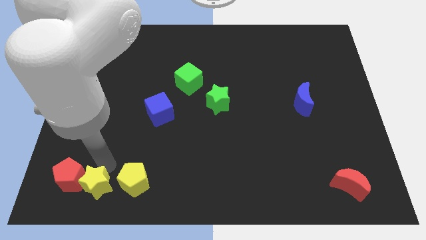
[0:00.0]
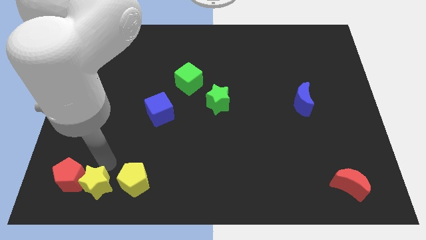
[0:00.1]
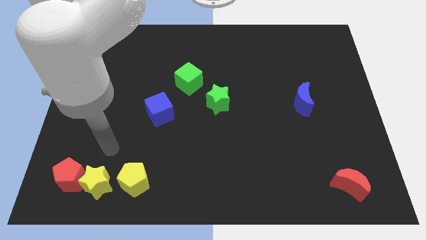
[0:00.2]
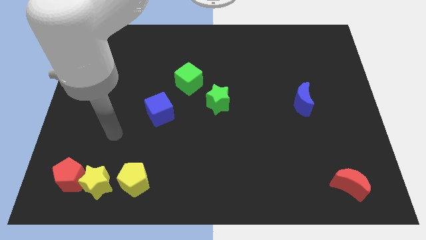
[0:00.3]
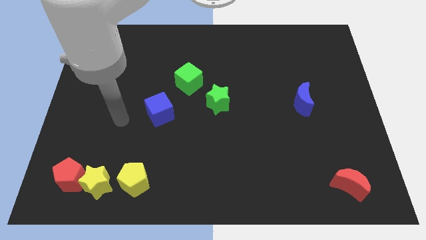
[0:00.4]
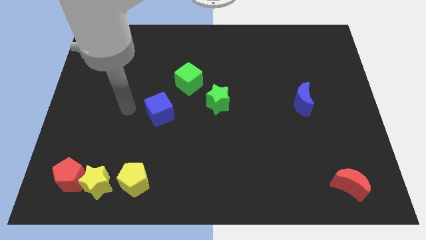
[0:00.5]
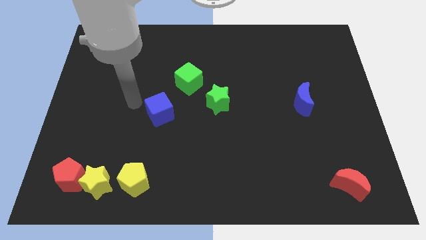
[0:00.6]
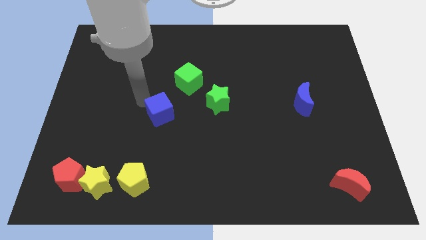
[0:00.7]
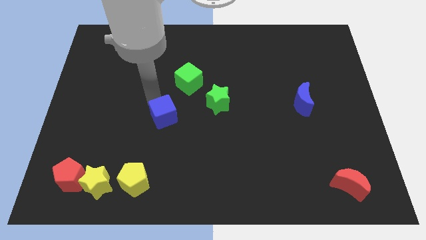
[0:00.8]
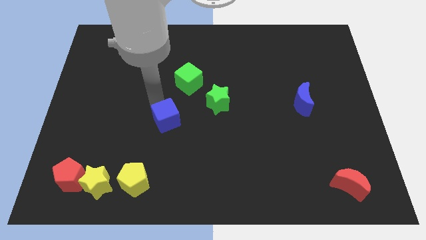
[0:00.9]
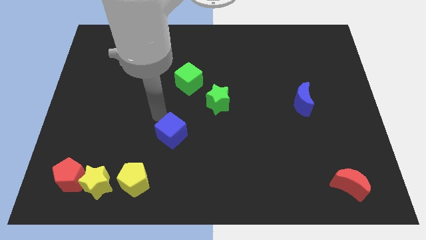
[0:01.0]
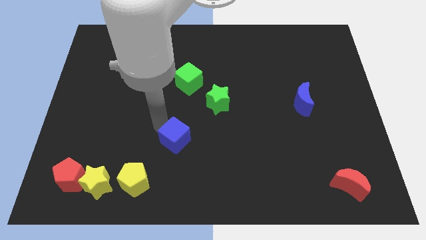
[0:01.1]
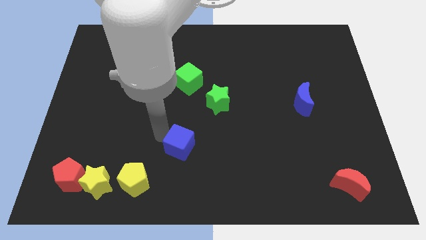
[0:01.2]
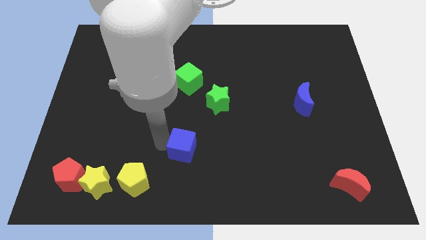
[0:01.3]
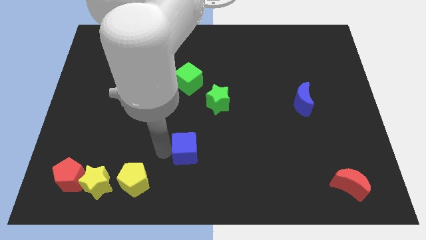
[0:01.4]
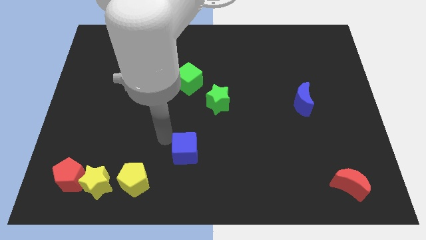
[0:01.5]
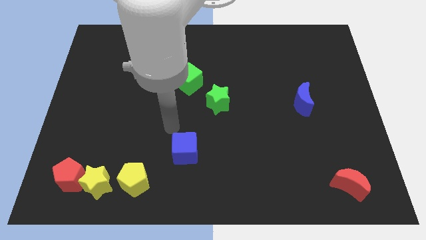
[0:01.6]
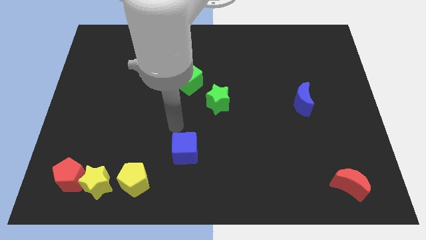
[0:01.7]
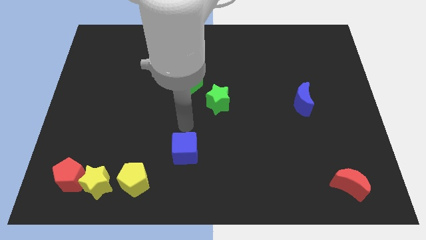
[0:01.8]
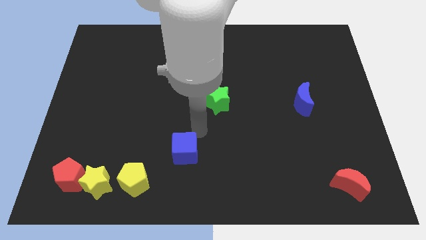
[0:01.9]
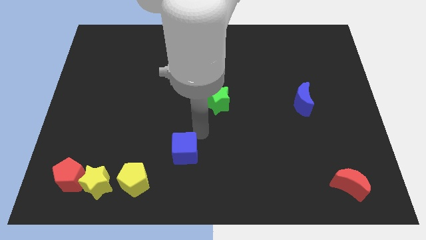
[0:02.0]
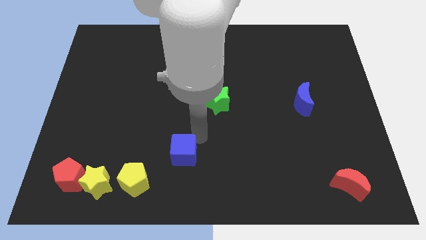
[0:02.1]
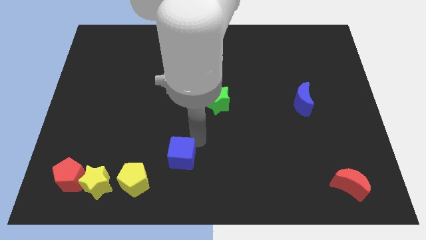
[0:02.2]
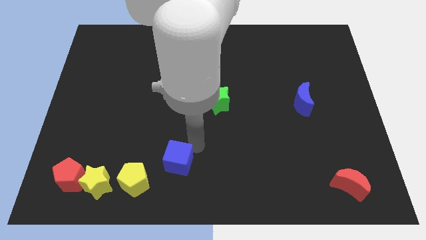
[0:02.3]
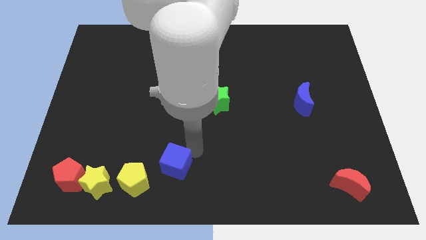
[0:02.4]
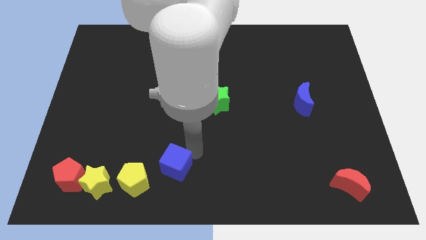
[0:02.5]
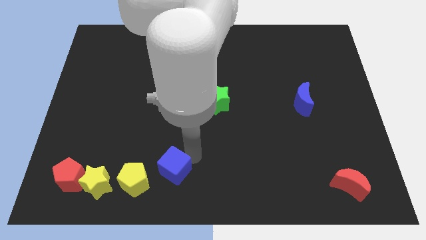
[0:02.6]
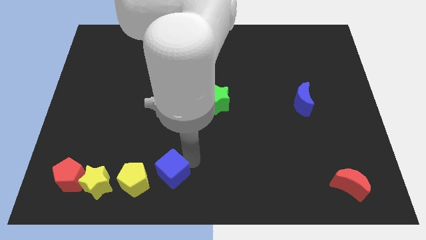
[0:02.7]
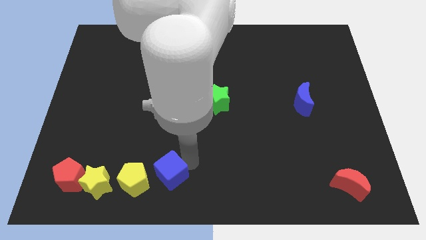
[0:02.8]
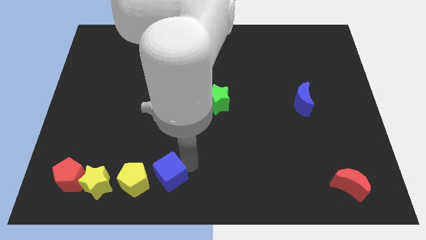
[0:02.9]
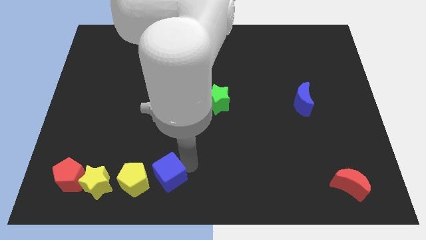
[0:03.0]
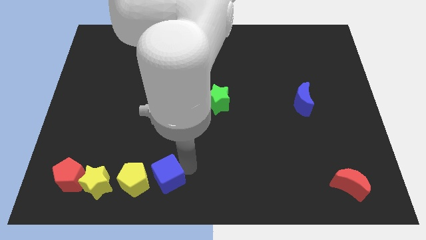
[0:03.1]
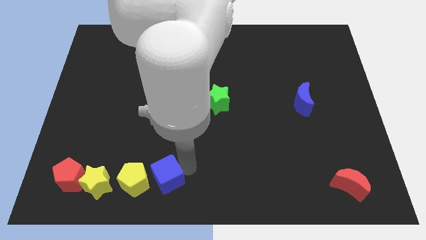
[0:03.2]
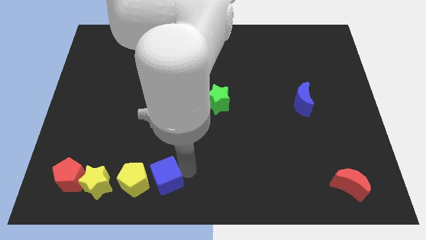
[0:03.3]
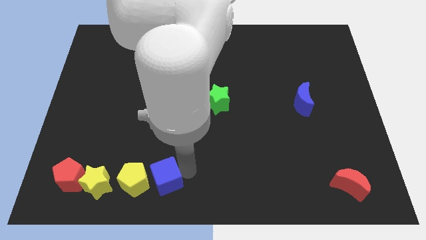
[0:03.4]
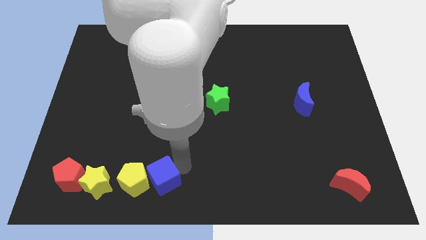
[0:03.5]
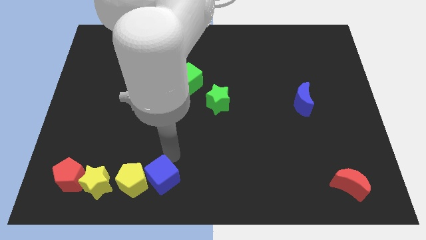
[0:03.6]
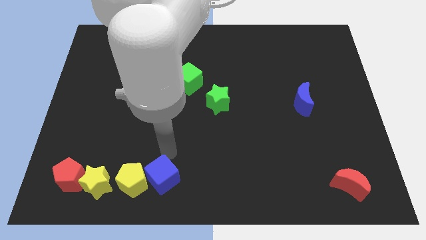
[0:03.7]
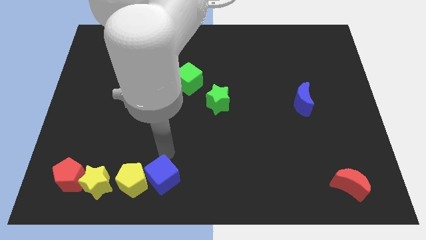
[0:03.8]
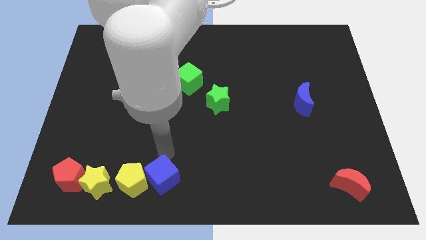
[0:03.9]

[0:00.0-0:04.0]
push the blue cube into the right side yellow pentagon

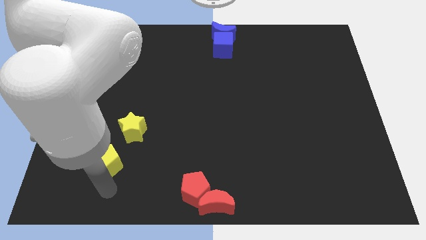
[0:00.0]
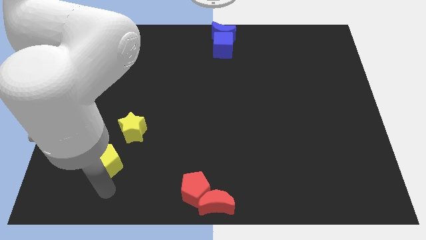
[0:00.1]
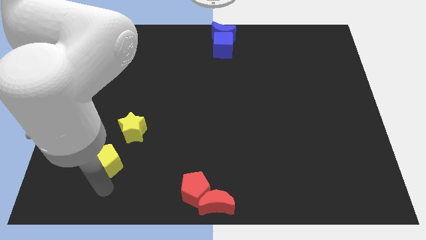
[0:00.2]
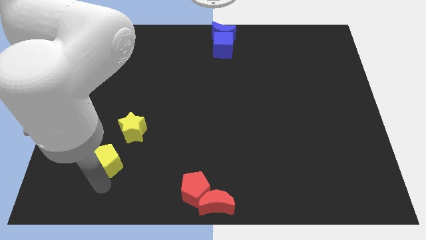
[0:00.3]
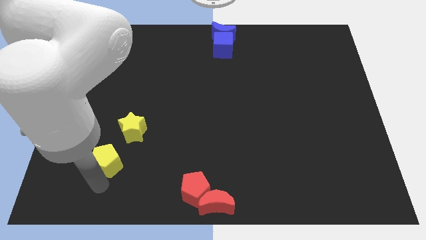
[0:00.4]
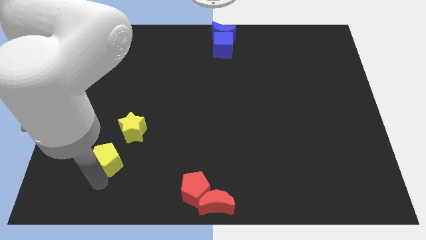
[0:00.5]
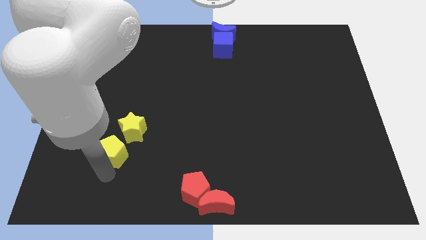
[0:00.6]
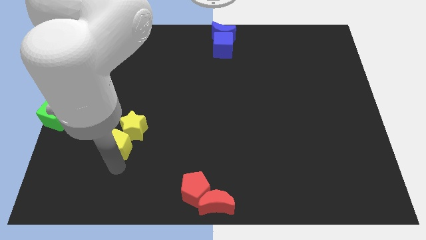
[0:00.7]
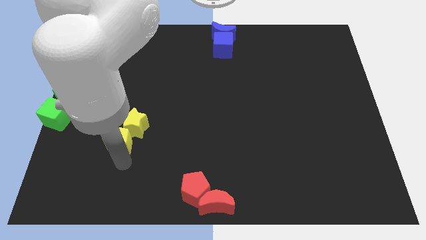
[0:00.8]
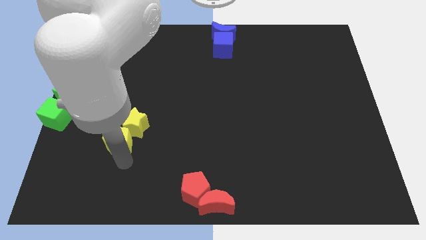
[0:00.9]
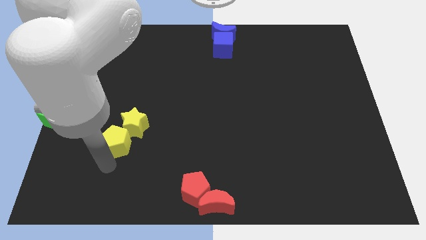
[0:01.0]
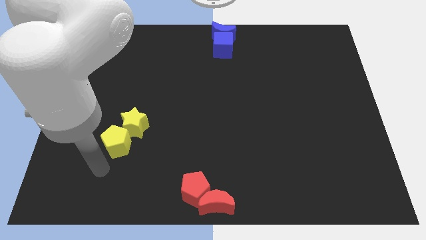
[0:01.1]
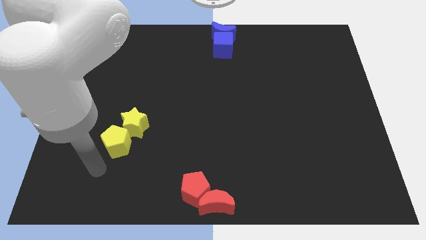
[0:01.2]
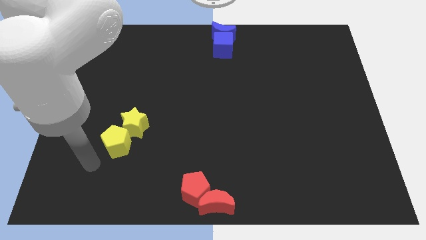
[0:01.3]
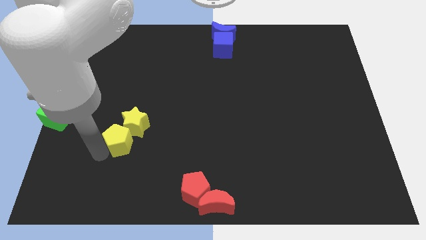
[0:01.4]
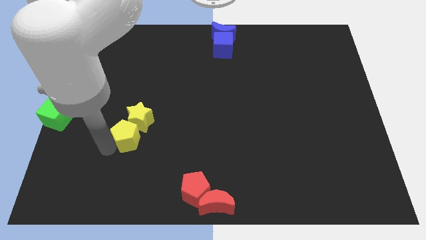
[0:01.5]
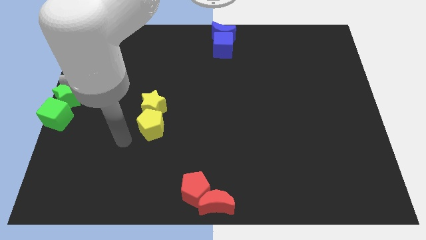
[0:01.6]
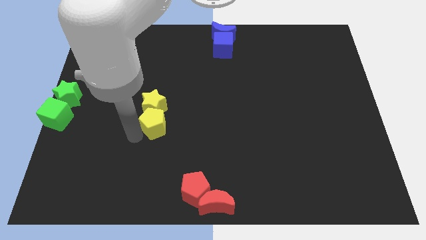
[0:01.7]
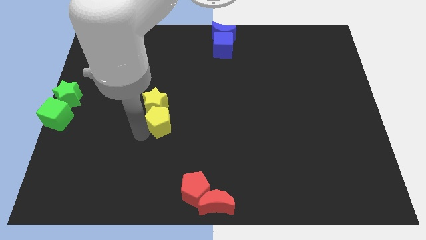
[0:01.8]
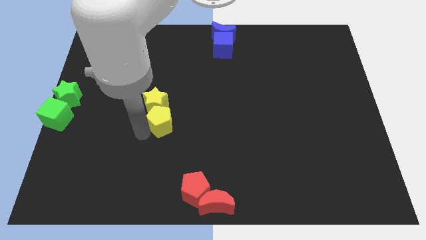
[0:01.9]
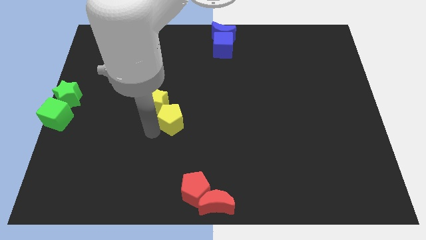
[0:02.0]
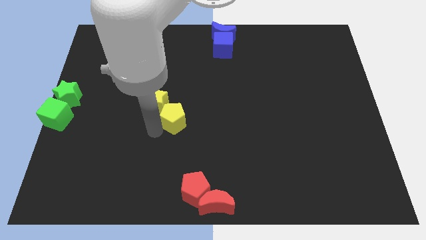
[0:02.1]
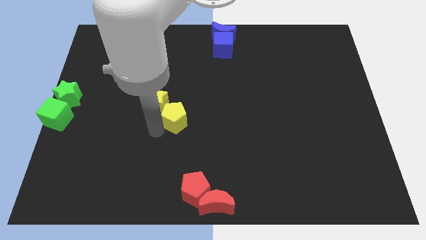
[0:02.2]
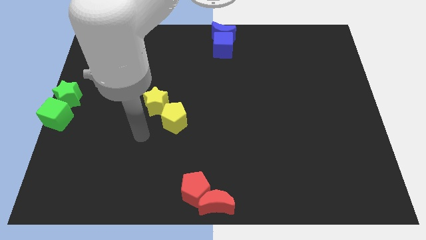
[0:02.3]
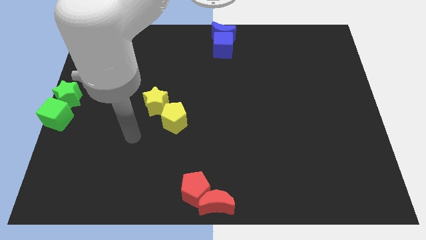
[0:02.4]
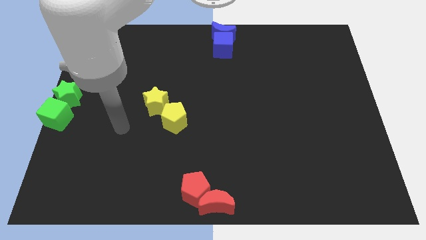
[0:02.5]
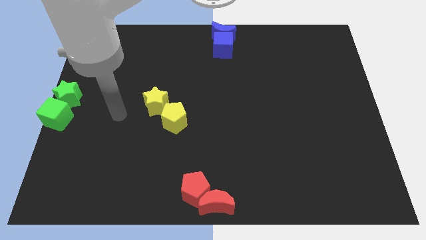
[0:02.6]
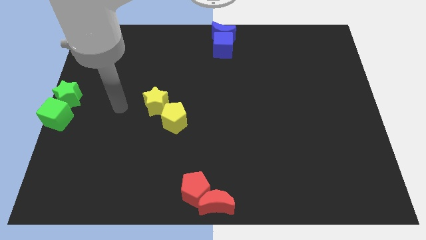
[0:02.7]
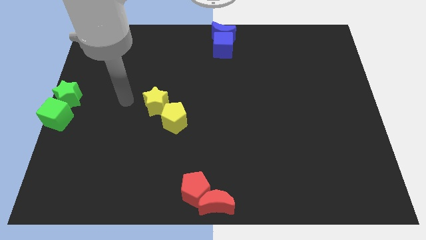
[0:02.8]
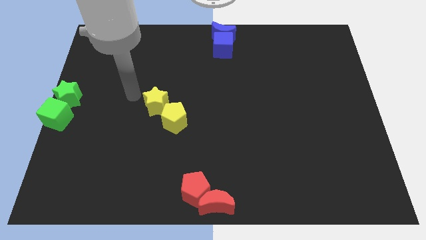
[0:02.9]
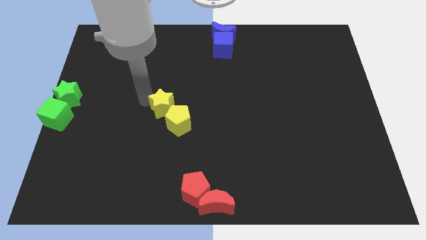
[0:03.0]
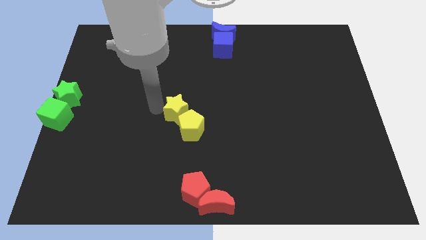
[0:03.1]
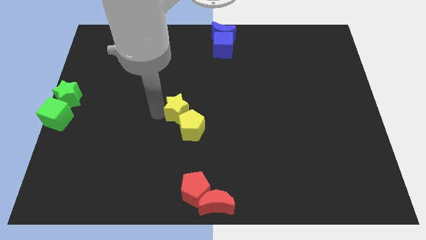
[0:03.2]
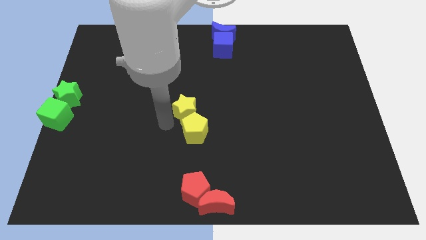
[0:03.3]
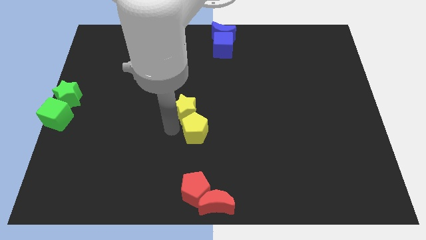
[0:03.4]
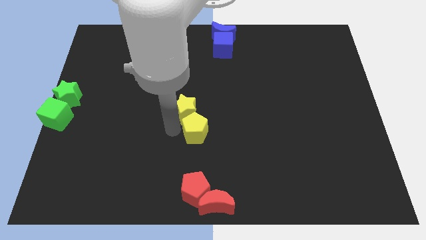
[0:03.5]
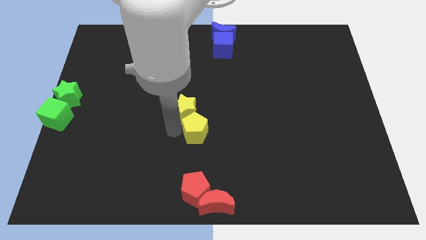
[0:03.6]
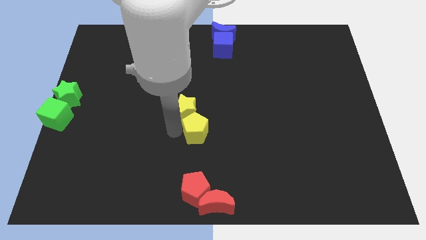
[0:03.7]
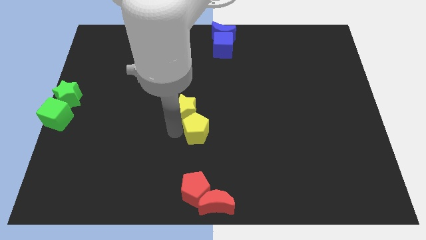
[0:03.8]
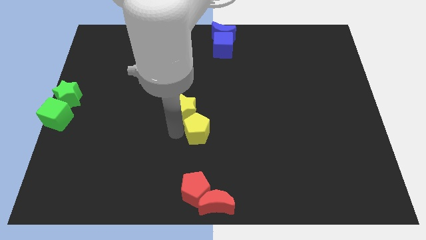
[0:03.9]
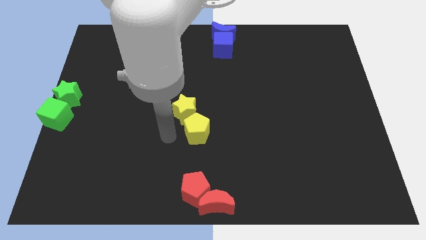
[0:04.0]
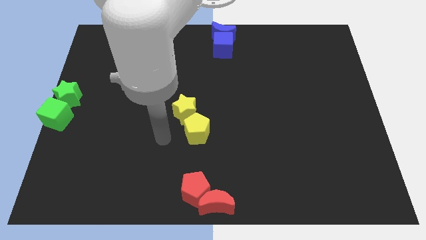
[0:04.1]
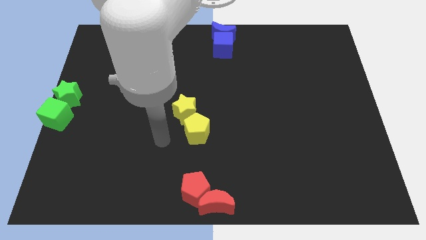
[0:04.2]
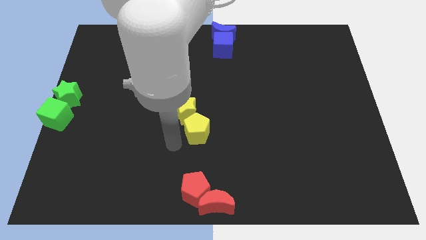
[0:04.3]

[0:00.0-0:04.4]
slide the yellow blocks towards the center

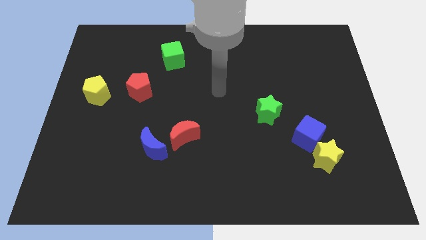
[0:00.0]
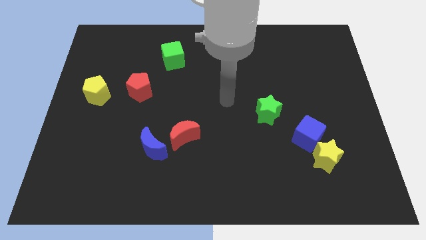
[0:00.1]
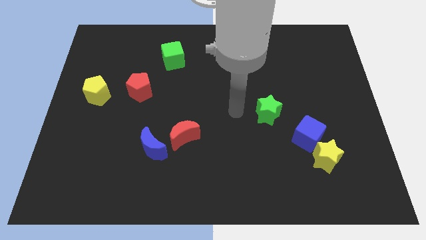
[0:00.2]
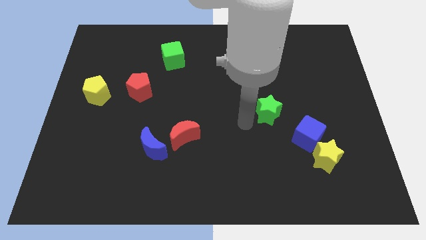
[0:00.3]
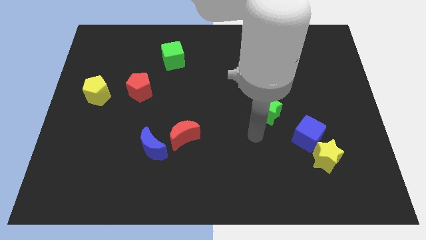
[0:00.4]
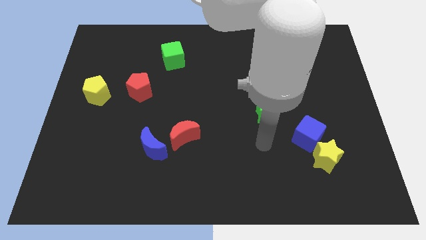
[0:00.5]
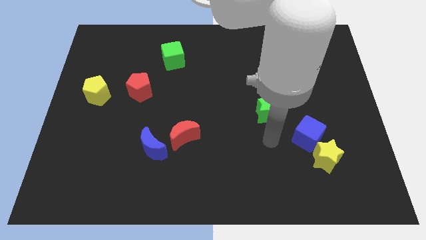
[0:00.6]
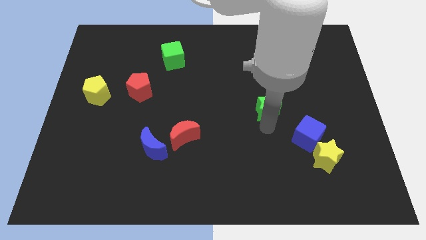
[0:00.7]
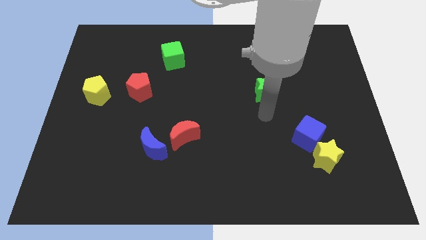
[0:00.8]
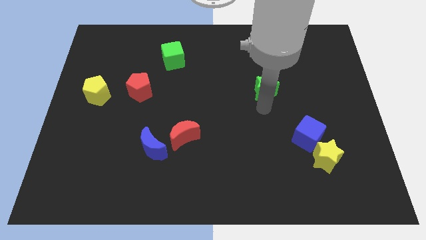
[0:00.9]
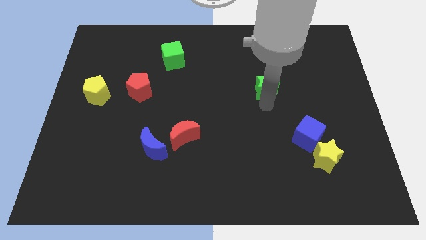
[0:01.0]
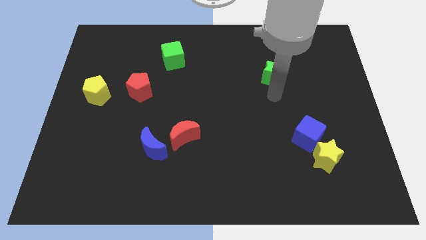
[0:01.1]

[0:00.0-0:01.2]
push the green star up slightly
